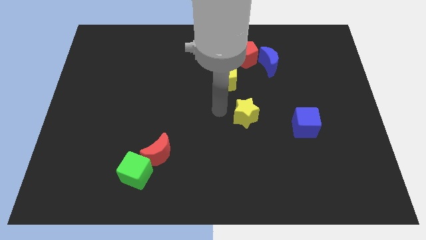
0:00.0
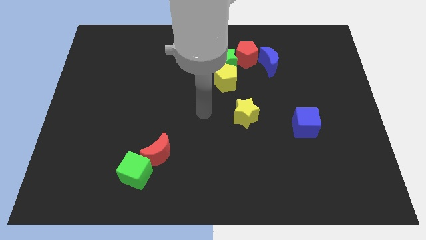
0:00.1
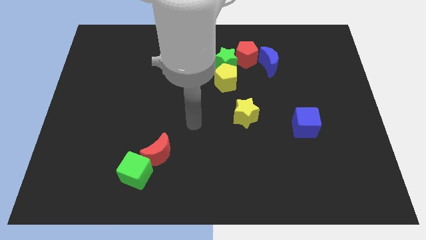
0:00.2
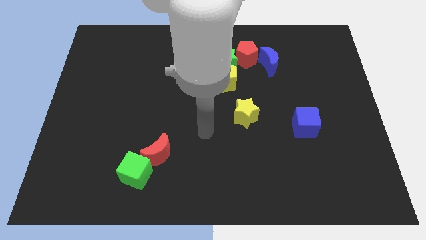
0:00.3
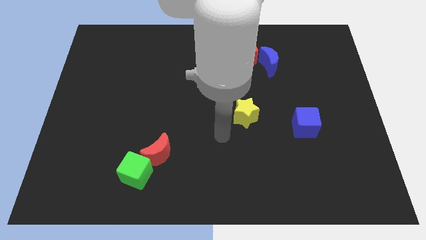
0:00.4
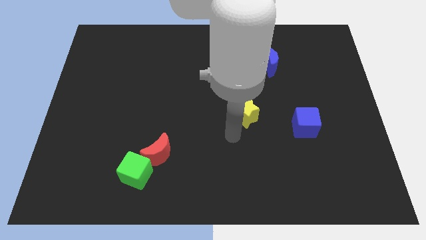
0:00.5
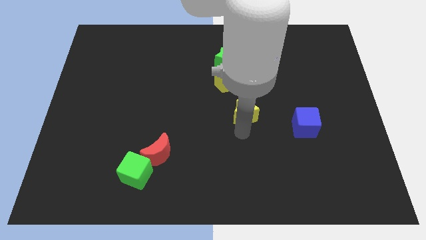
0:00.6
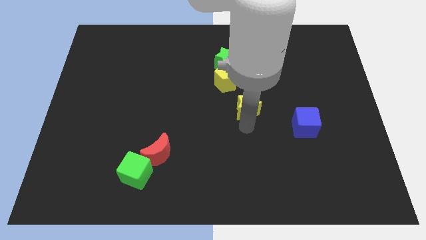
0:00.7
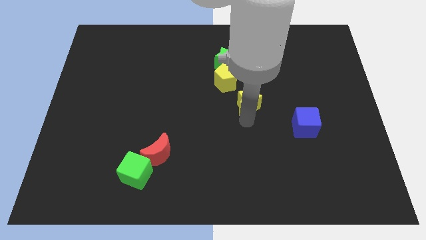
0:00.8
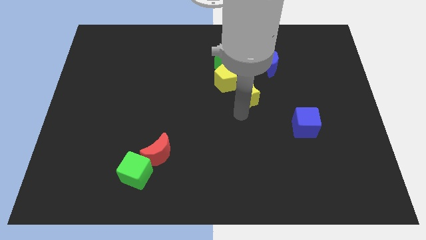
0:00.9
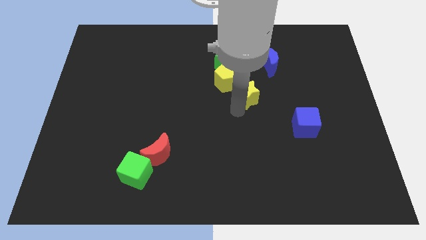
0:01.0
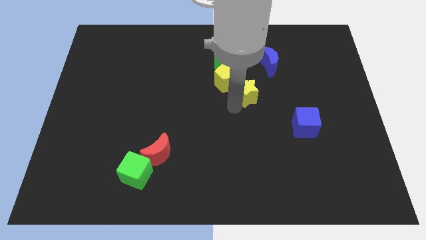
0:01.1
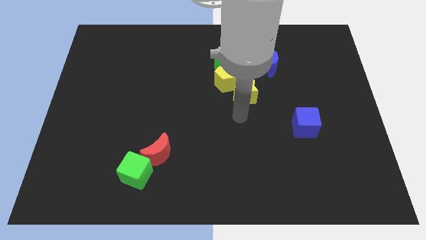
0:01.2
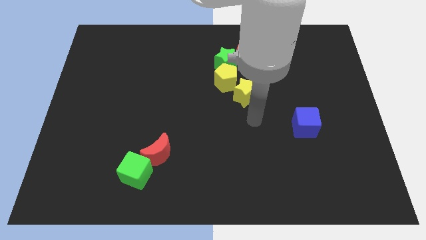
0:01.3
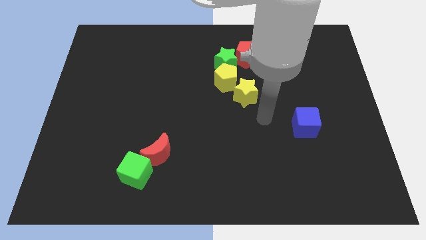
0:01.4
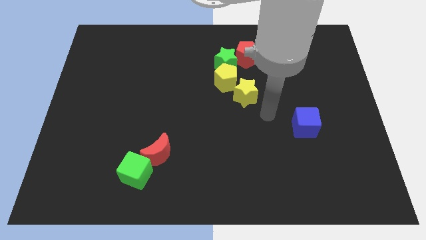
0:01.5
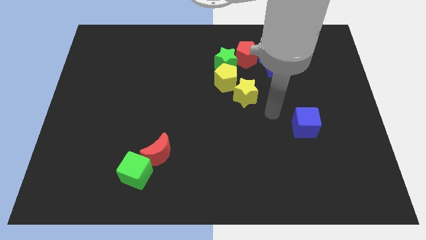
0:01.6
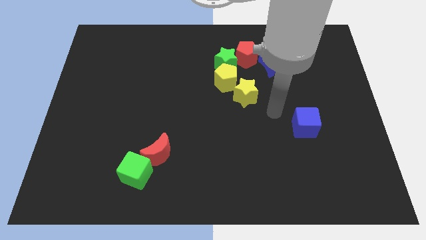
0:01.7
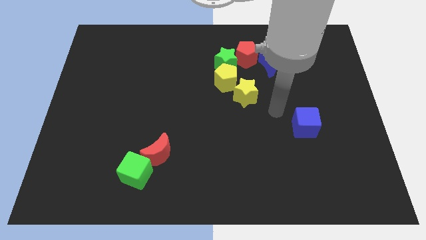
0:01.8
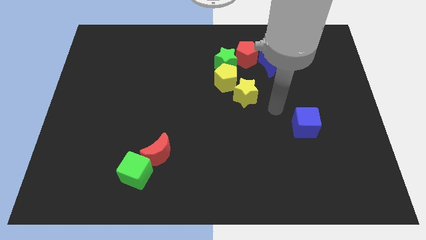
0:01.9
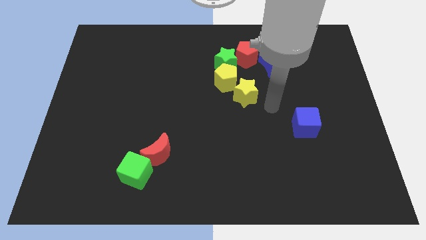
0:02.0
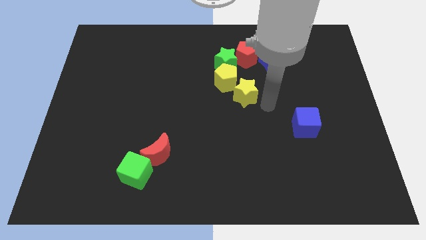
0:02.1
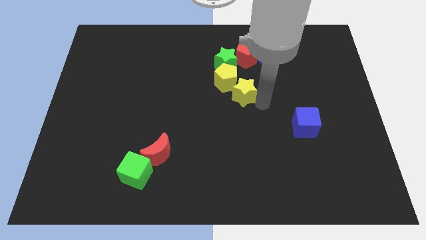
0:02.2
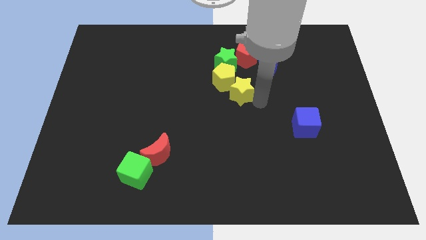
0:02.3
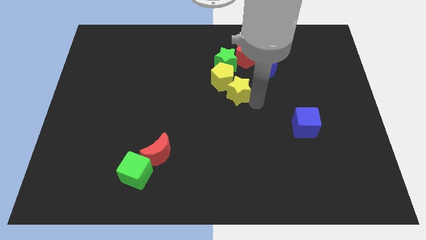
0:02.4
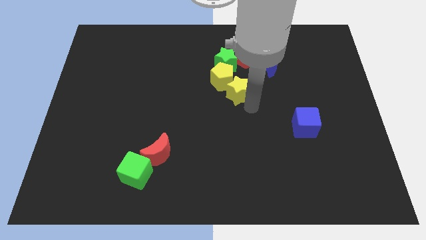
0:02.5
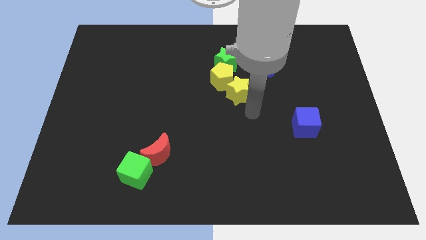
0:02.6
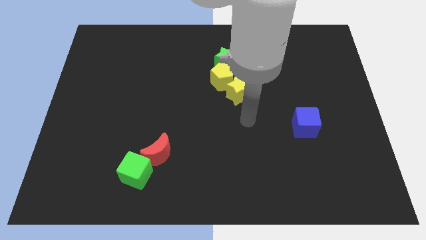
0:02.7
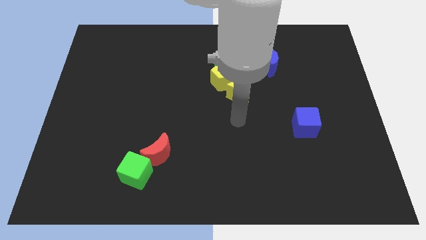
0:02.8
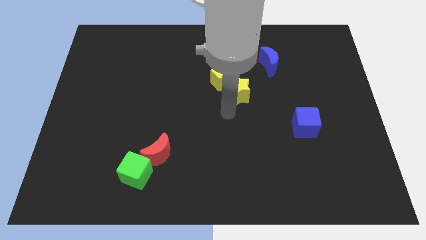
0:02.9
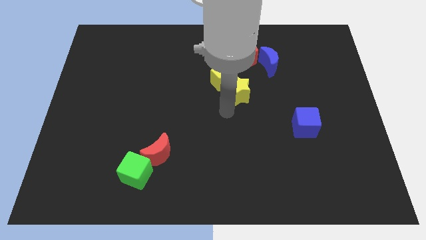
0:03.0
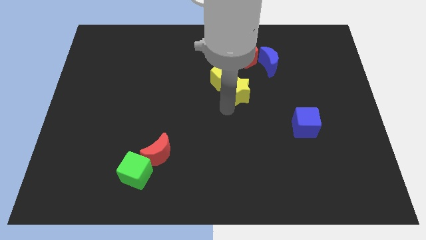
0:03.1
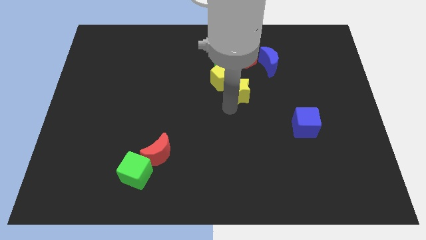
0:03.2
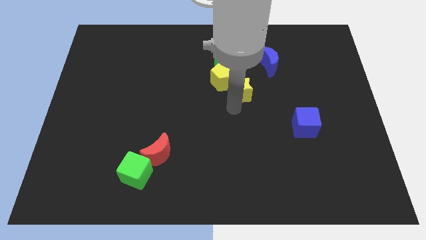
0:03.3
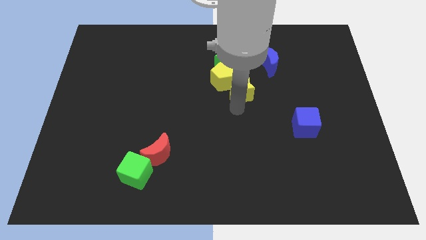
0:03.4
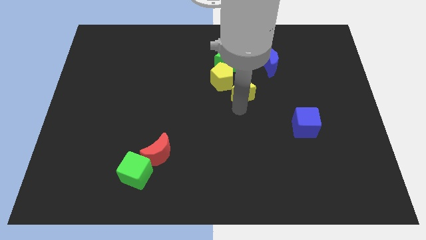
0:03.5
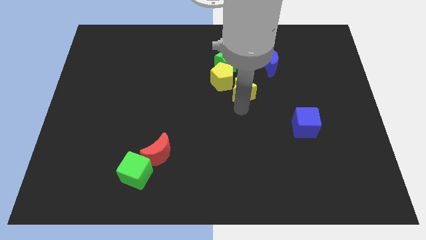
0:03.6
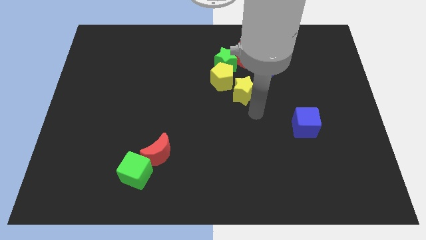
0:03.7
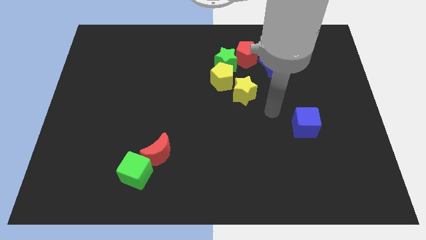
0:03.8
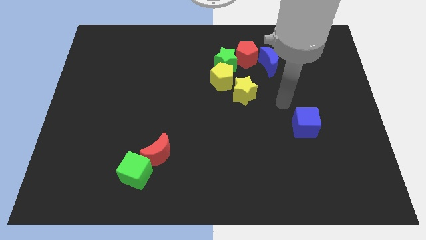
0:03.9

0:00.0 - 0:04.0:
push the yellow star at the bottom right of the yellow pentagon

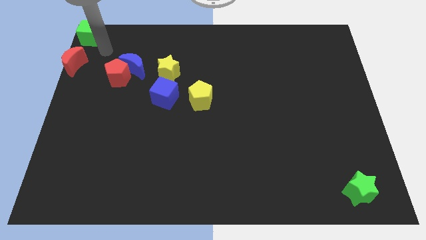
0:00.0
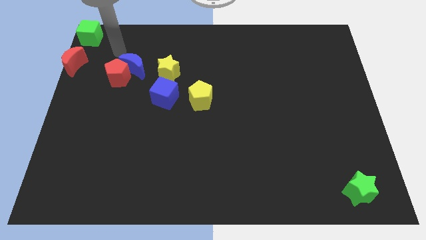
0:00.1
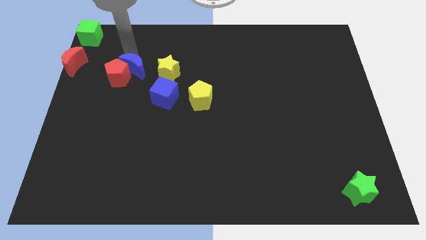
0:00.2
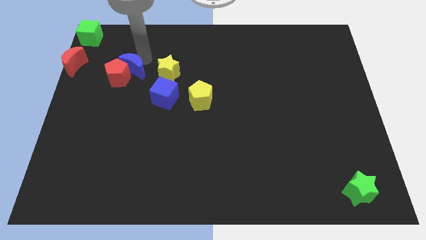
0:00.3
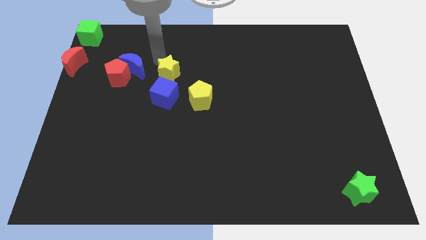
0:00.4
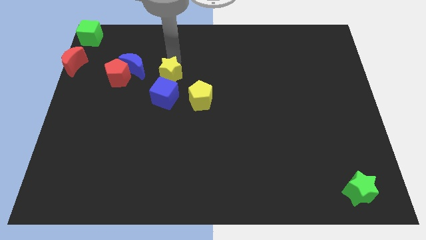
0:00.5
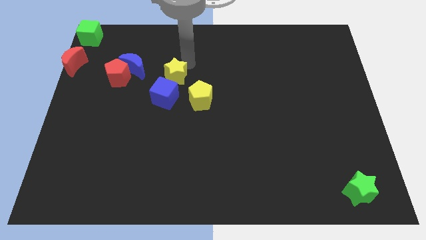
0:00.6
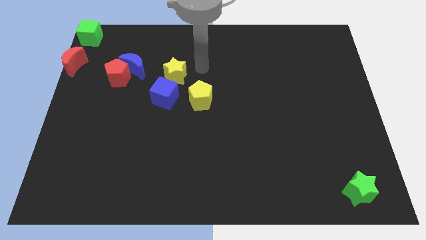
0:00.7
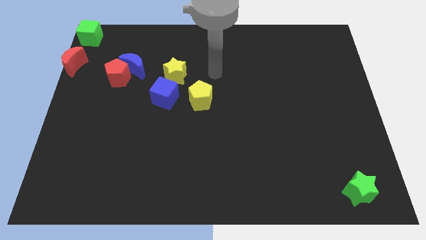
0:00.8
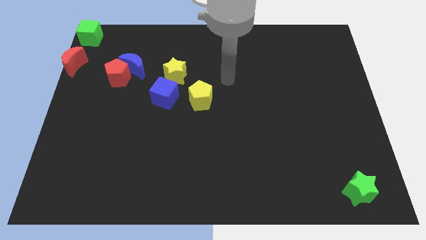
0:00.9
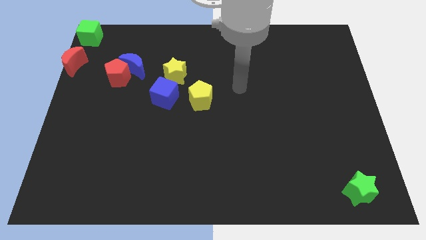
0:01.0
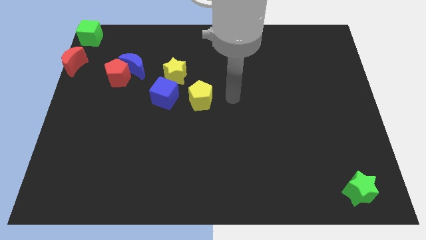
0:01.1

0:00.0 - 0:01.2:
slightly touch the yellow star

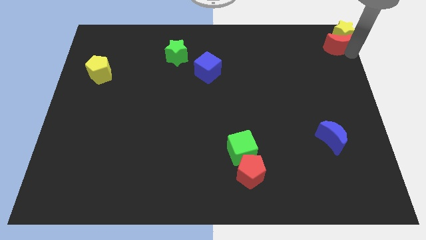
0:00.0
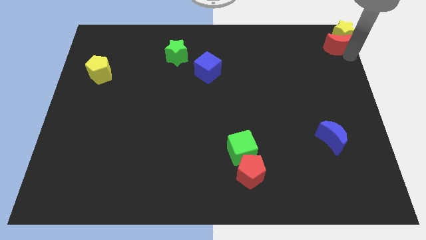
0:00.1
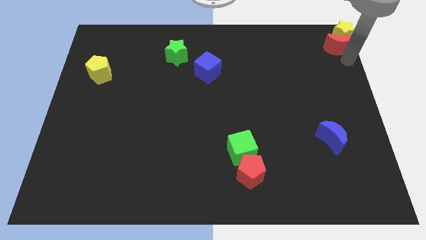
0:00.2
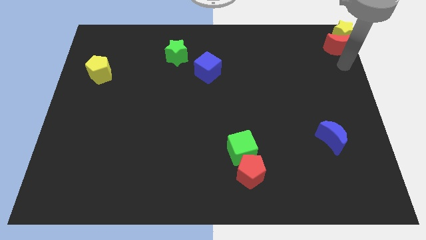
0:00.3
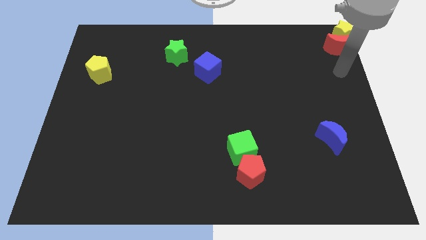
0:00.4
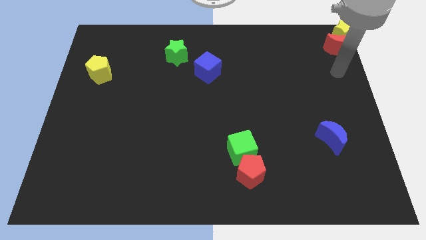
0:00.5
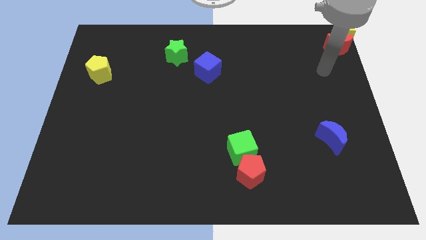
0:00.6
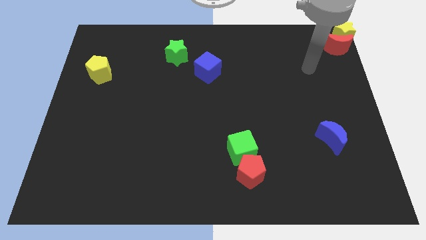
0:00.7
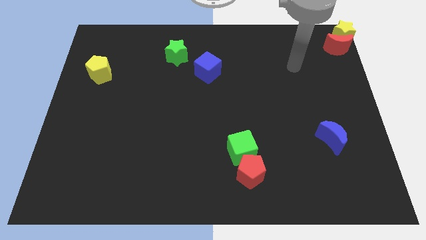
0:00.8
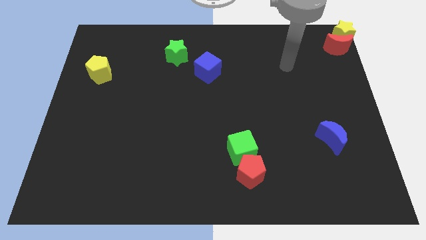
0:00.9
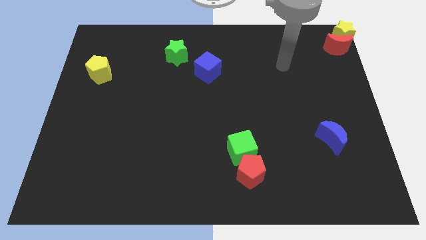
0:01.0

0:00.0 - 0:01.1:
move your arm away from red moon

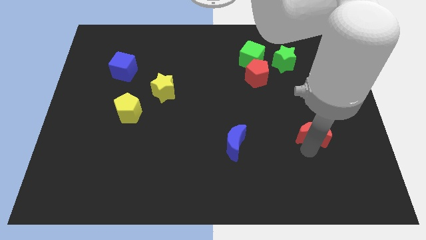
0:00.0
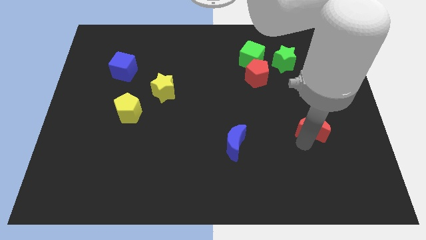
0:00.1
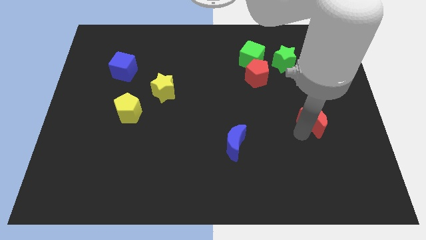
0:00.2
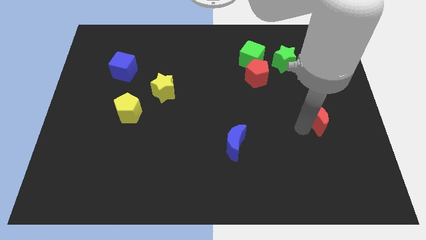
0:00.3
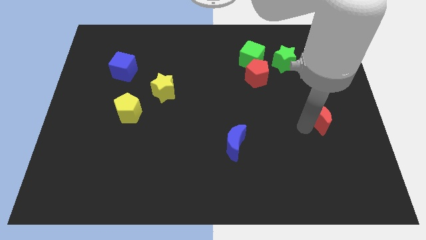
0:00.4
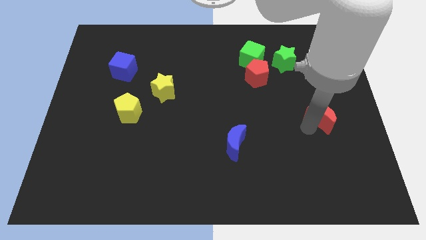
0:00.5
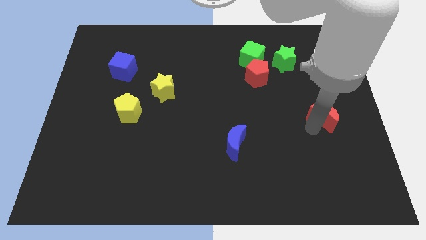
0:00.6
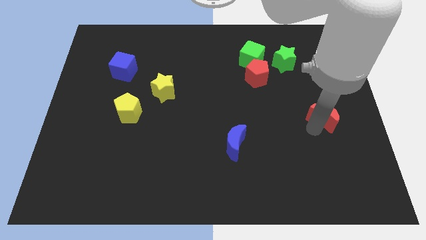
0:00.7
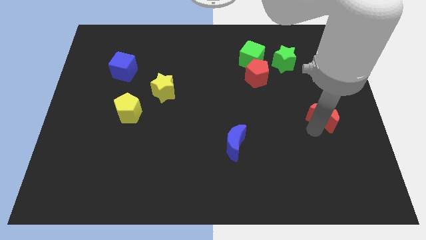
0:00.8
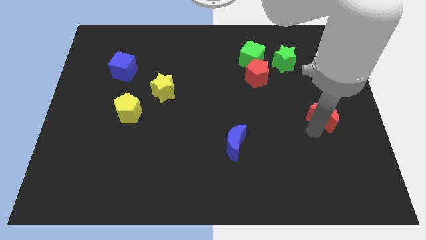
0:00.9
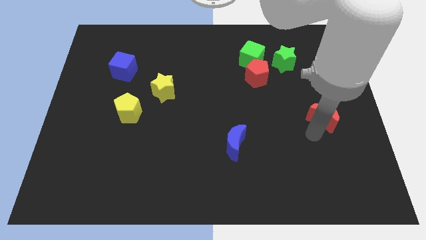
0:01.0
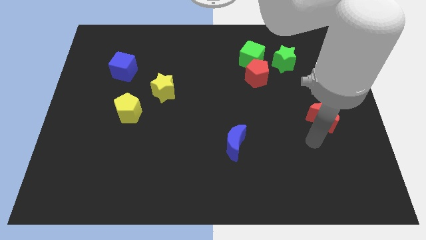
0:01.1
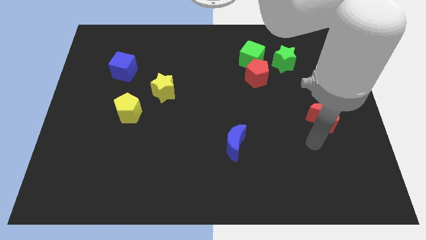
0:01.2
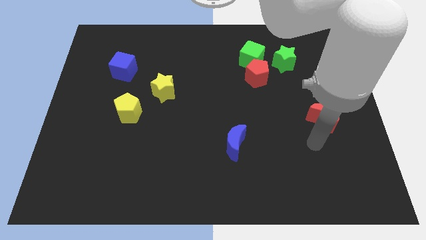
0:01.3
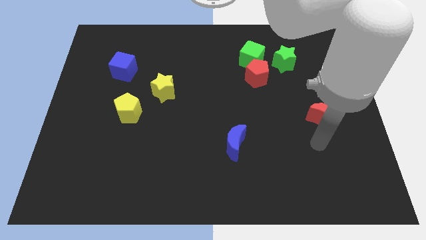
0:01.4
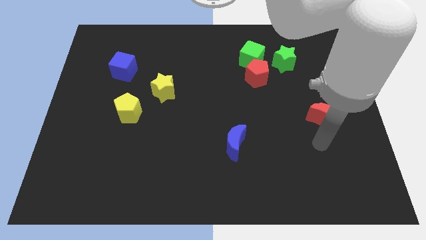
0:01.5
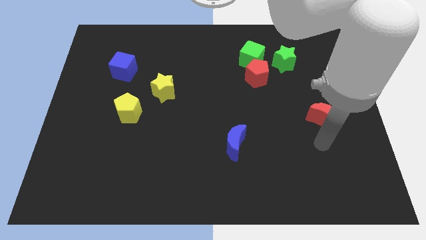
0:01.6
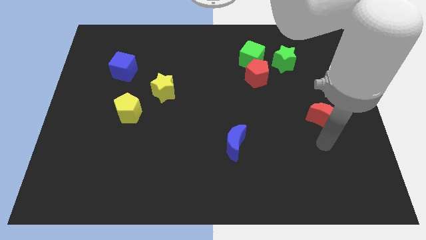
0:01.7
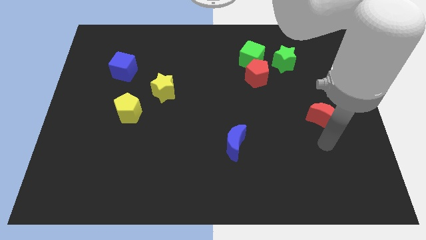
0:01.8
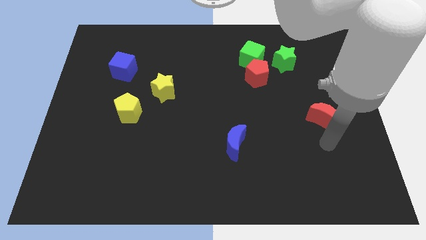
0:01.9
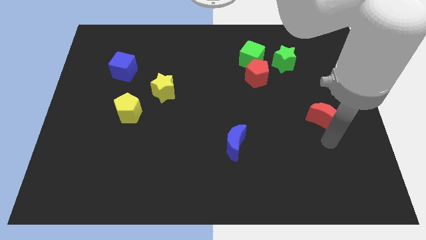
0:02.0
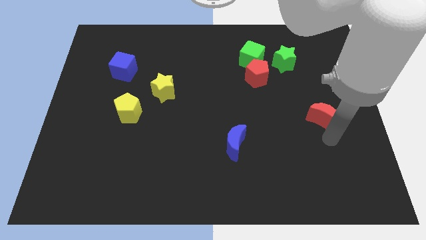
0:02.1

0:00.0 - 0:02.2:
move the red crescent towards the top

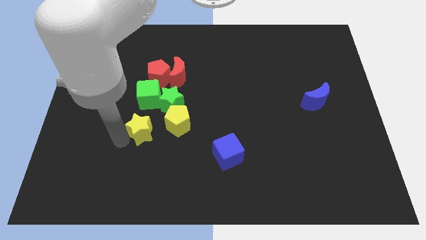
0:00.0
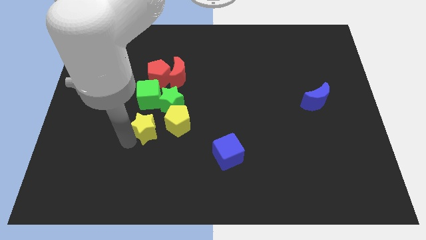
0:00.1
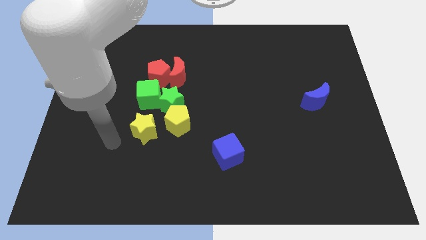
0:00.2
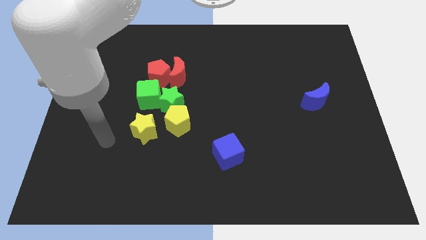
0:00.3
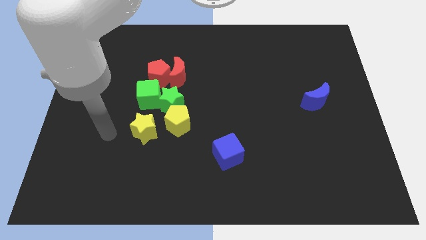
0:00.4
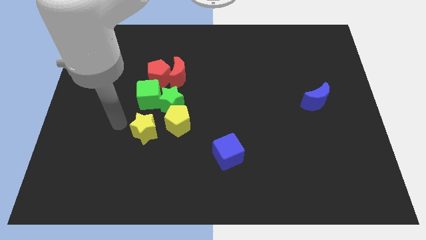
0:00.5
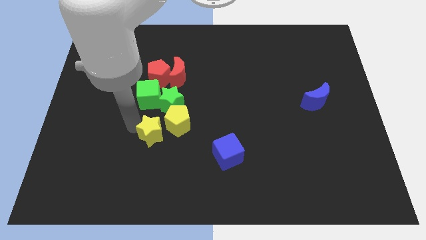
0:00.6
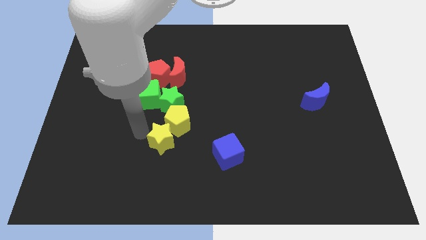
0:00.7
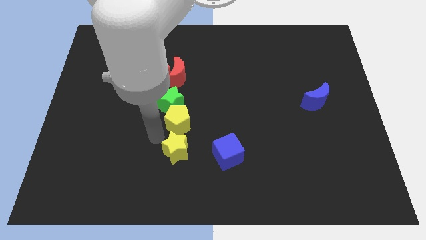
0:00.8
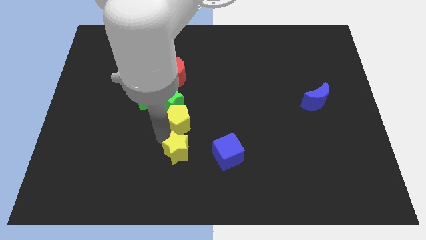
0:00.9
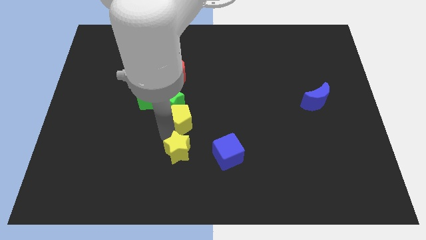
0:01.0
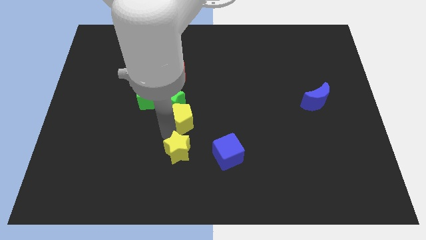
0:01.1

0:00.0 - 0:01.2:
place yellow star to the bottom of yellow pentagon
